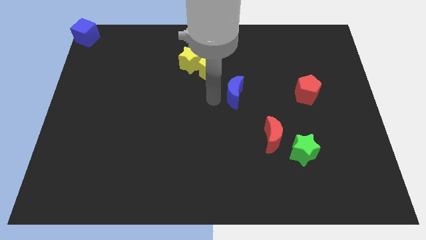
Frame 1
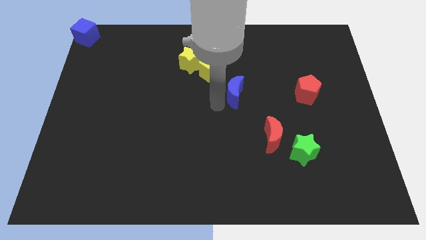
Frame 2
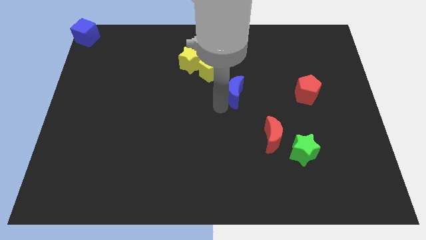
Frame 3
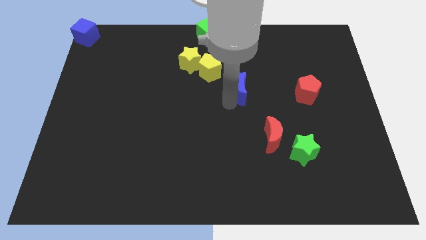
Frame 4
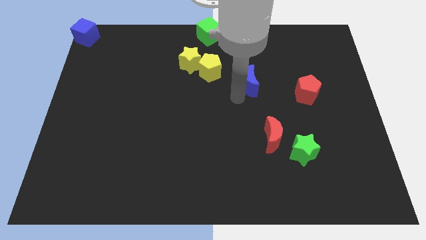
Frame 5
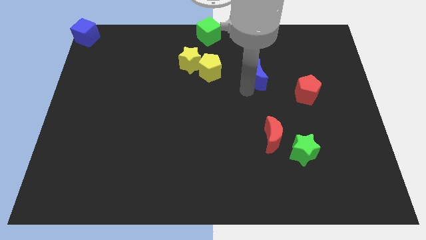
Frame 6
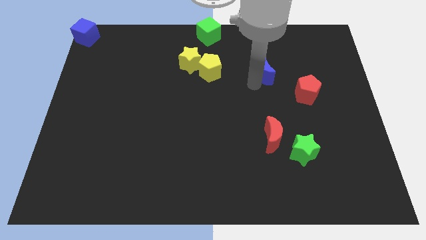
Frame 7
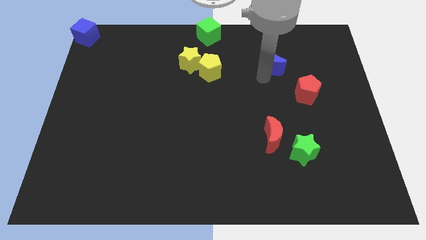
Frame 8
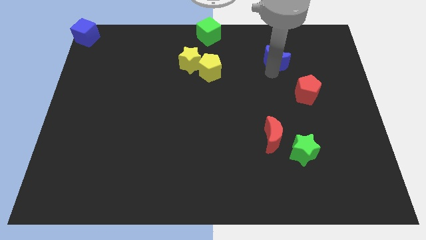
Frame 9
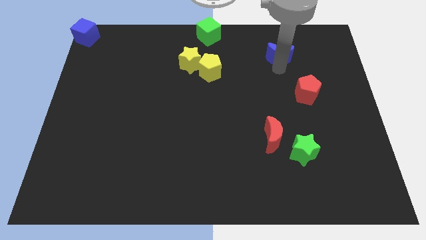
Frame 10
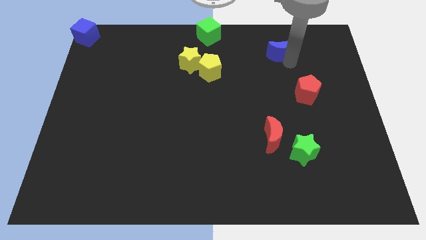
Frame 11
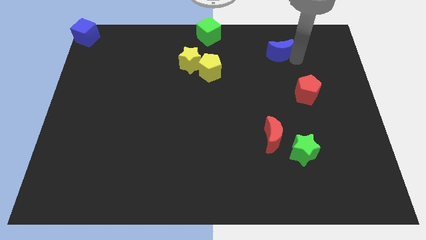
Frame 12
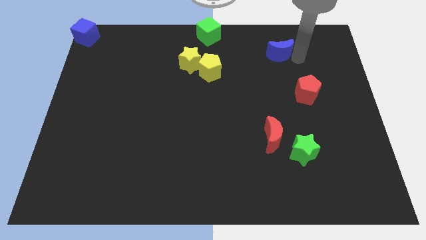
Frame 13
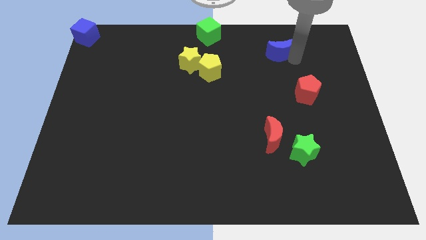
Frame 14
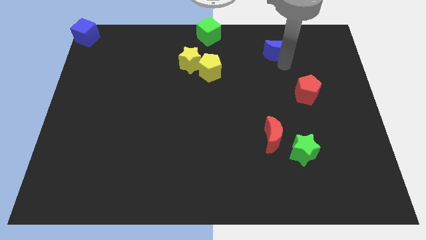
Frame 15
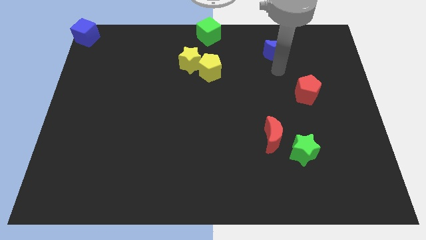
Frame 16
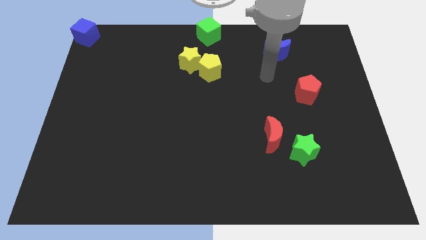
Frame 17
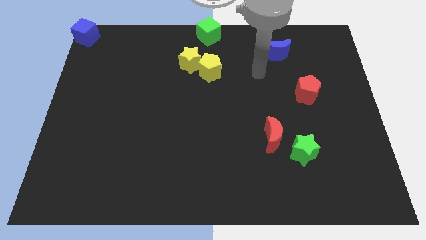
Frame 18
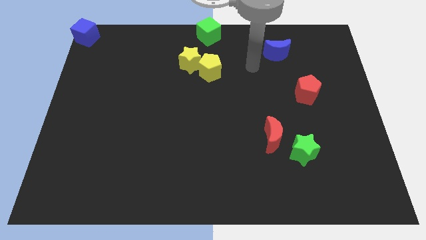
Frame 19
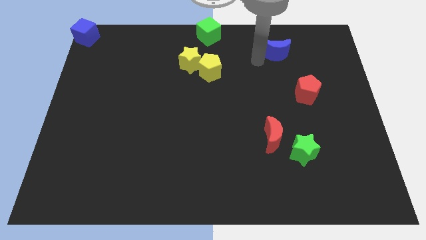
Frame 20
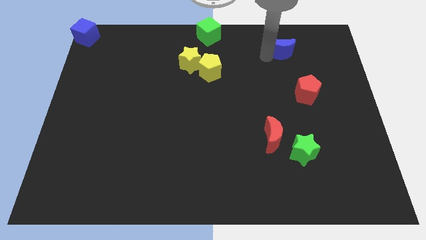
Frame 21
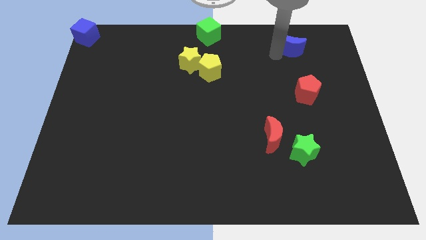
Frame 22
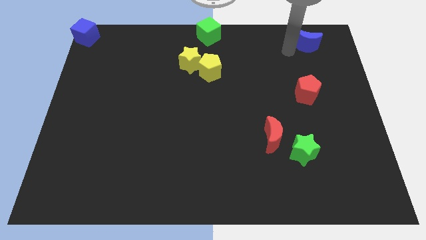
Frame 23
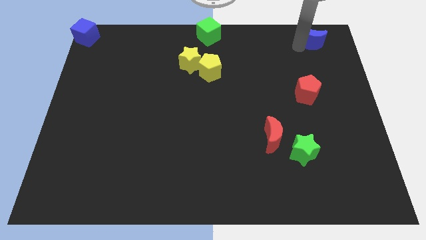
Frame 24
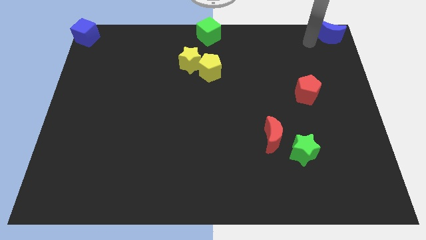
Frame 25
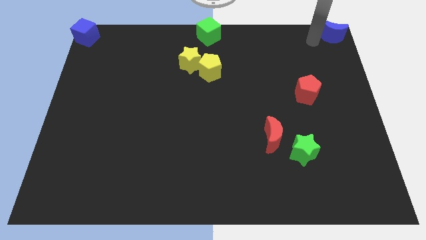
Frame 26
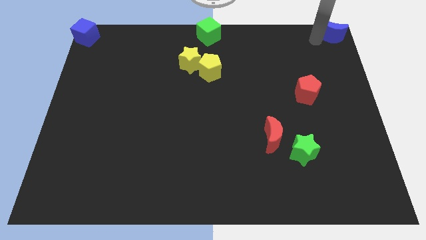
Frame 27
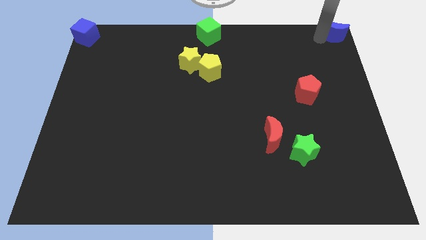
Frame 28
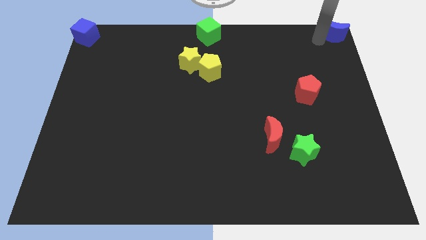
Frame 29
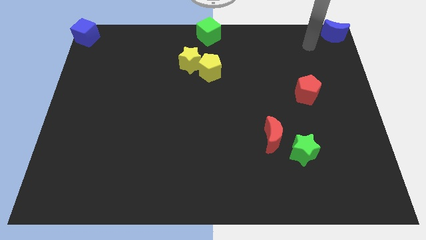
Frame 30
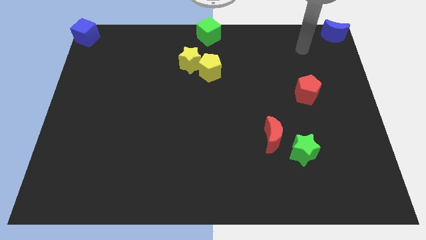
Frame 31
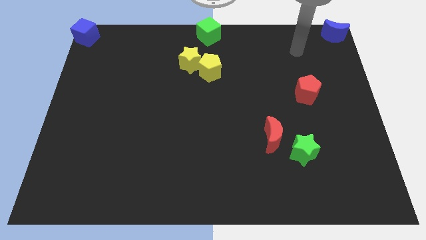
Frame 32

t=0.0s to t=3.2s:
push the blue crescent at the top right corner of the board

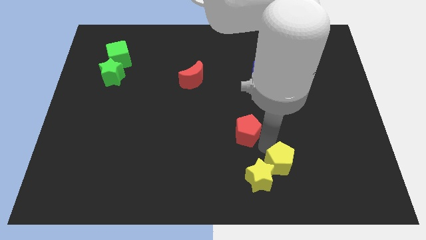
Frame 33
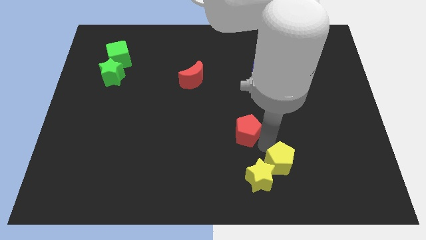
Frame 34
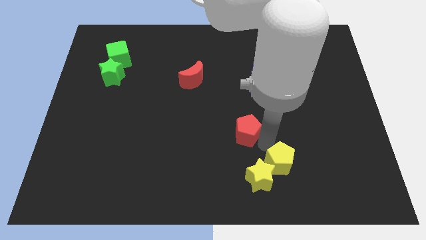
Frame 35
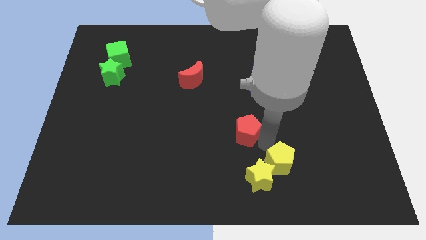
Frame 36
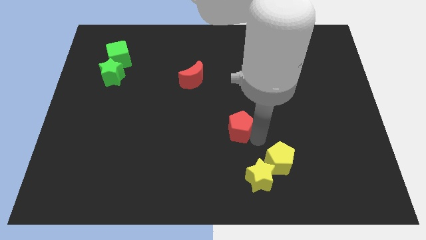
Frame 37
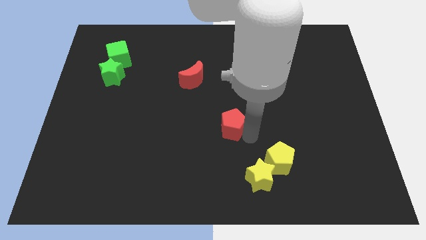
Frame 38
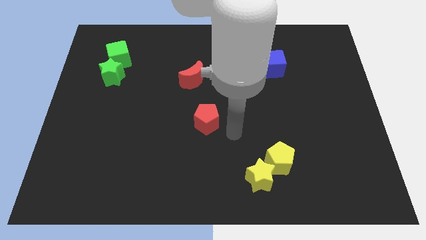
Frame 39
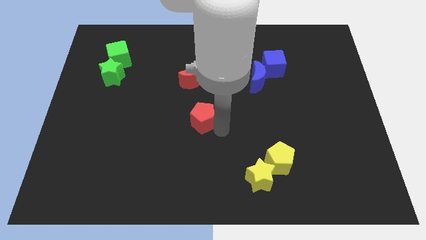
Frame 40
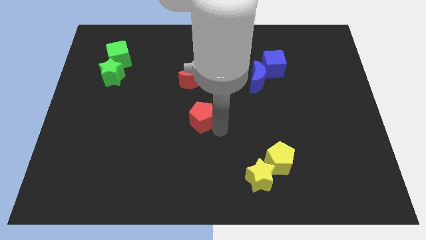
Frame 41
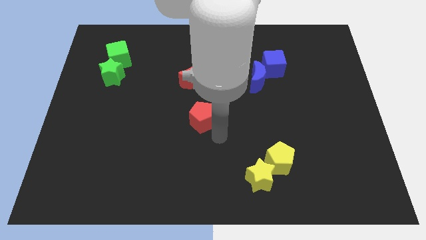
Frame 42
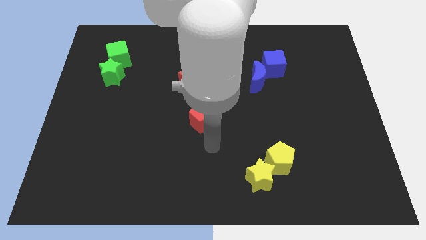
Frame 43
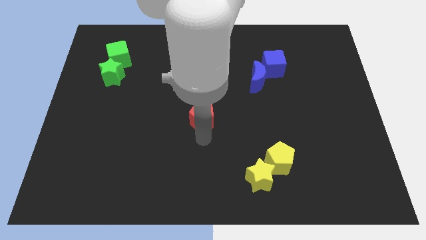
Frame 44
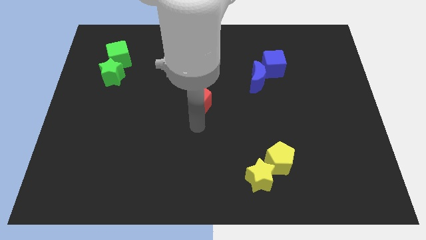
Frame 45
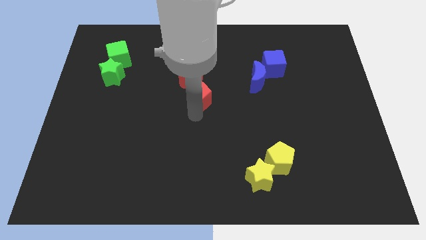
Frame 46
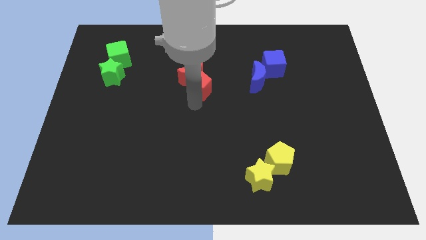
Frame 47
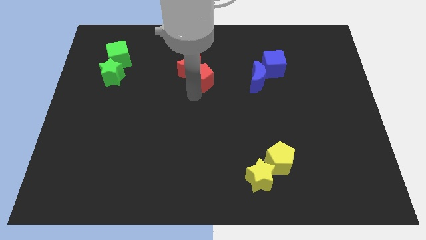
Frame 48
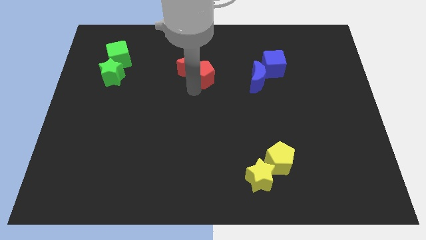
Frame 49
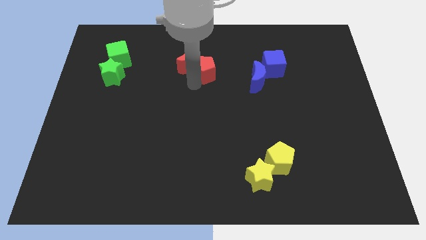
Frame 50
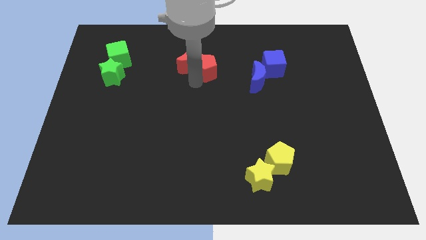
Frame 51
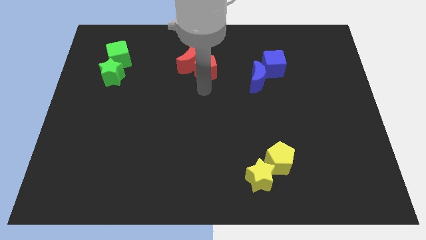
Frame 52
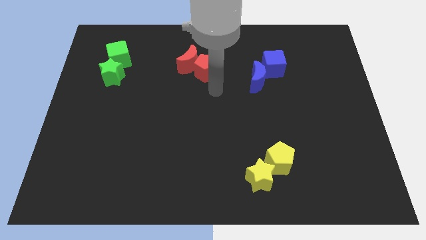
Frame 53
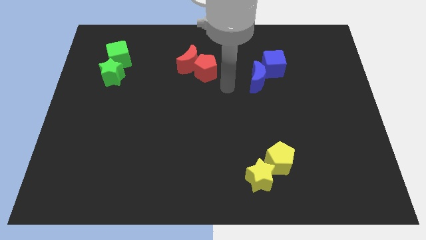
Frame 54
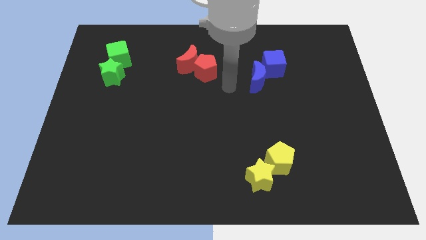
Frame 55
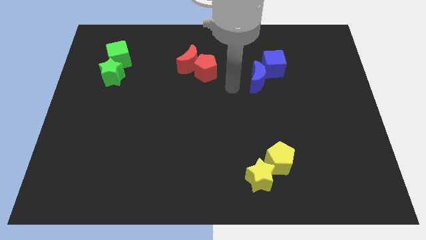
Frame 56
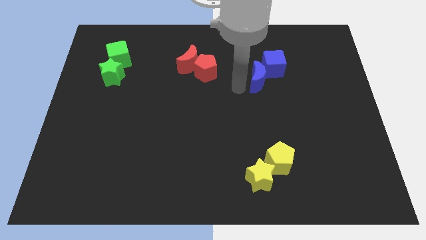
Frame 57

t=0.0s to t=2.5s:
move the red pentagon into the red moon

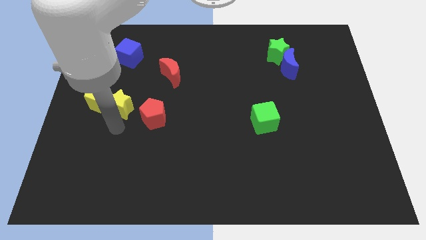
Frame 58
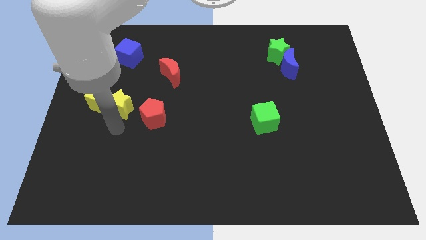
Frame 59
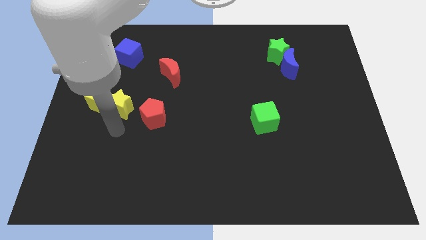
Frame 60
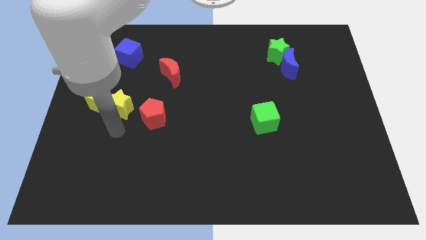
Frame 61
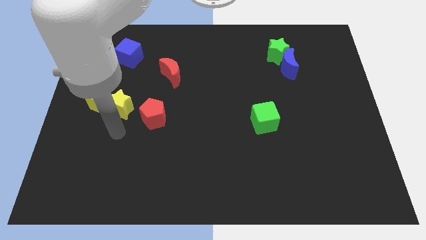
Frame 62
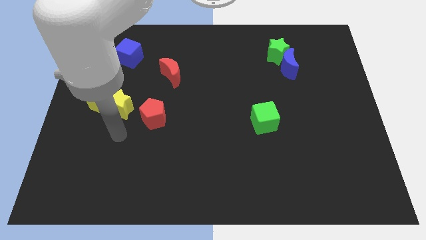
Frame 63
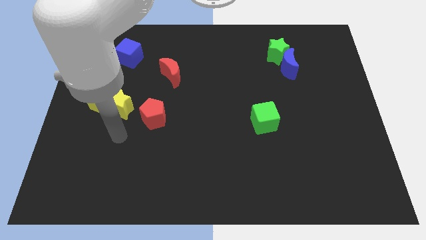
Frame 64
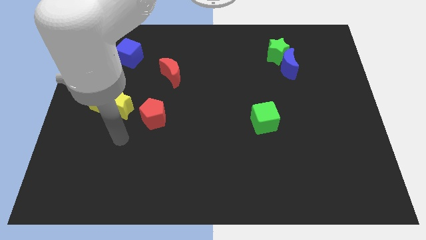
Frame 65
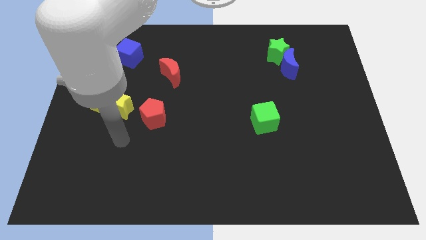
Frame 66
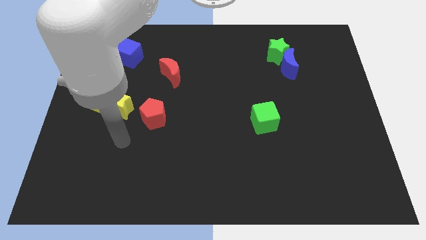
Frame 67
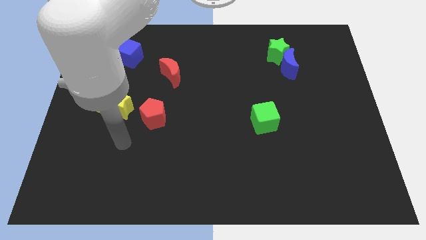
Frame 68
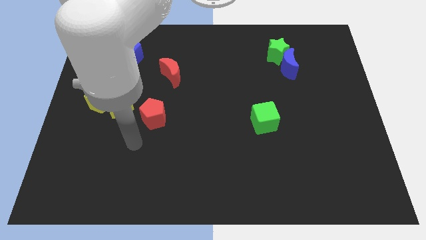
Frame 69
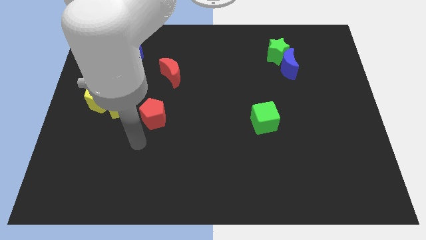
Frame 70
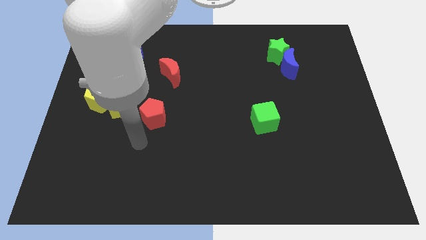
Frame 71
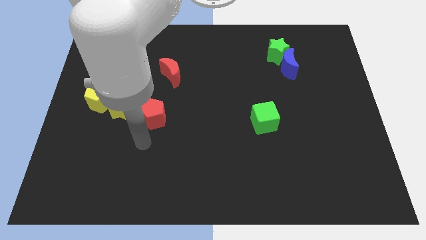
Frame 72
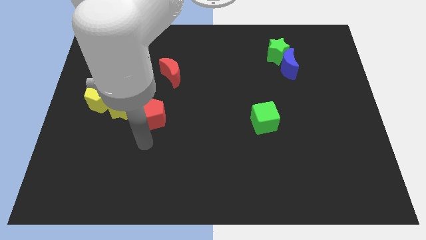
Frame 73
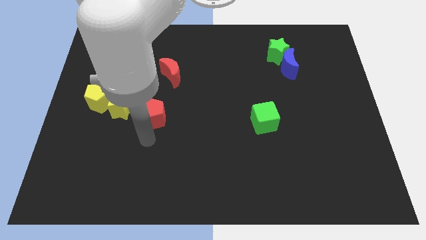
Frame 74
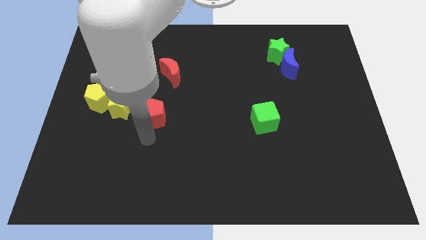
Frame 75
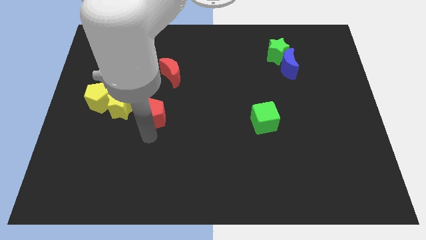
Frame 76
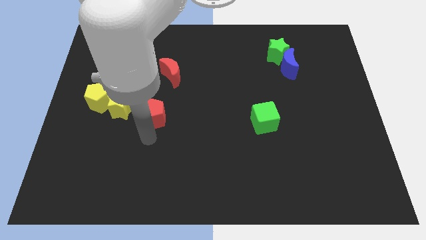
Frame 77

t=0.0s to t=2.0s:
move your arm to the bottom of red pentagon

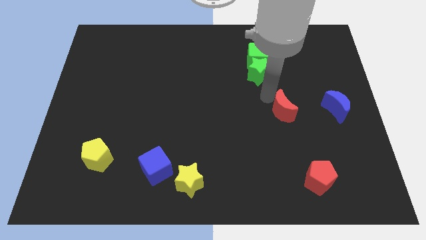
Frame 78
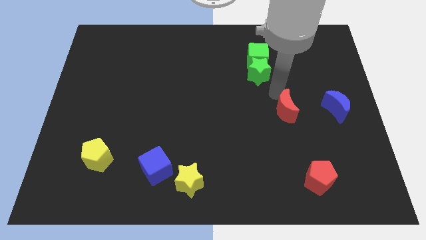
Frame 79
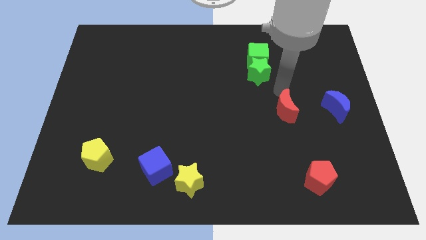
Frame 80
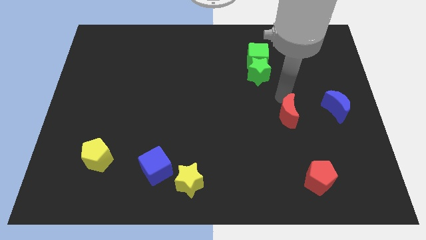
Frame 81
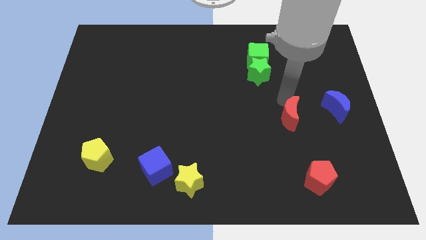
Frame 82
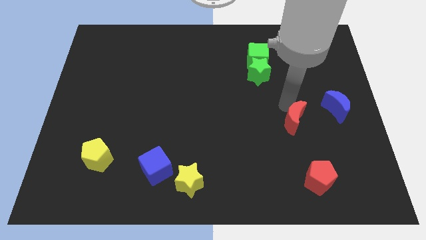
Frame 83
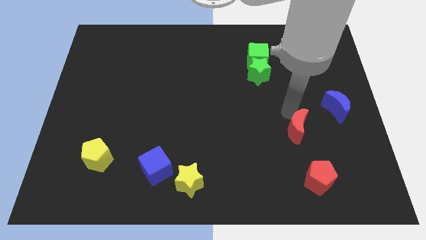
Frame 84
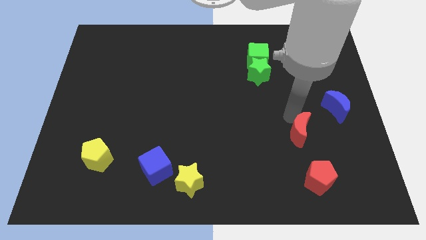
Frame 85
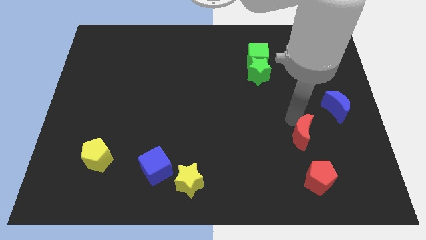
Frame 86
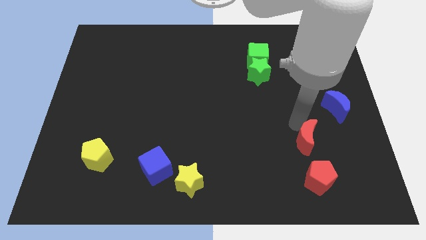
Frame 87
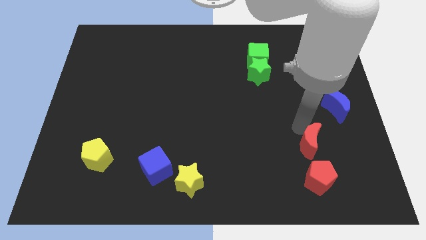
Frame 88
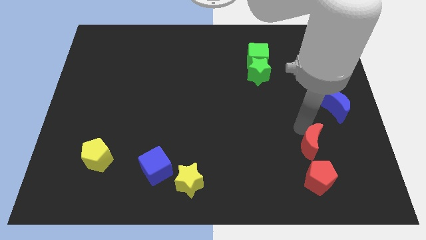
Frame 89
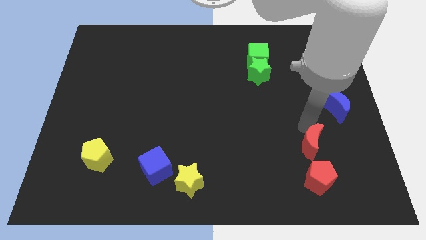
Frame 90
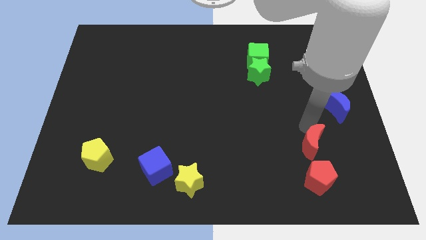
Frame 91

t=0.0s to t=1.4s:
place the red moon diagonally left to the red pentagon
